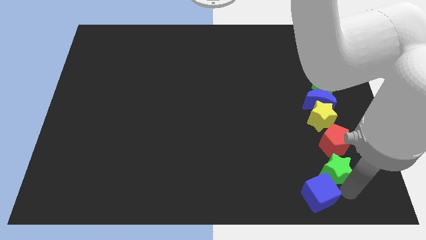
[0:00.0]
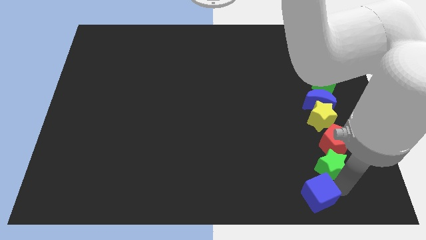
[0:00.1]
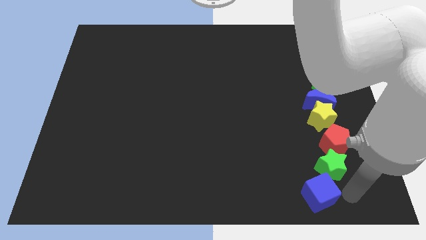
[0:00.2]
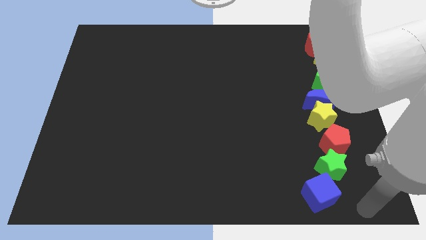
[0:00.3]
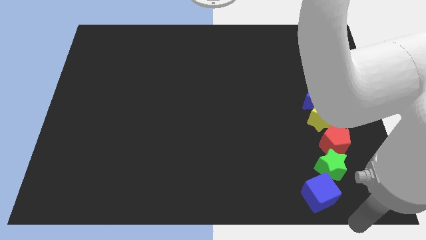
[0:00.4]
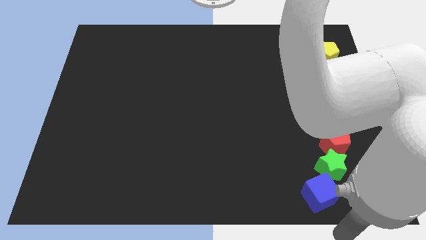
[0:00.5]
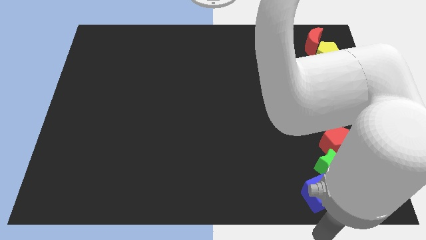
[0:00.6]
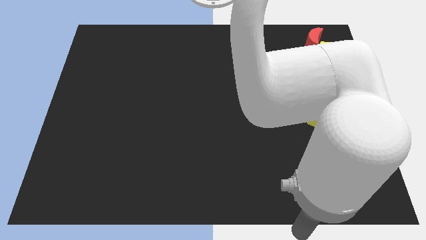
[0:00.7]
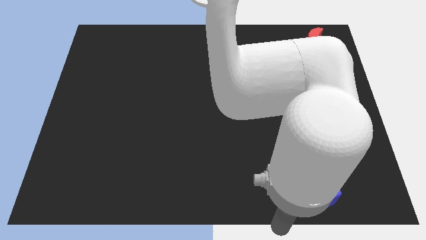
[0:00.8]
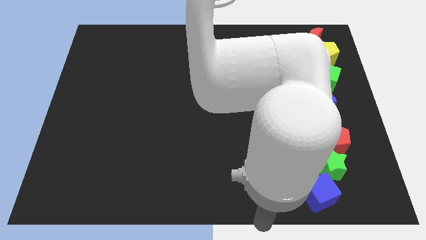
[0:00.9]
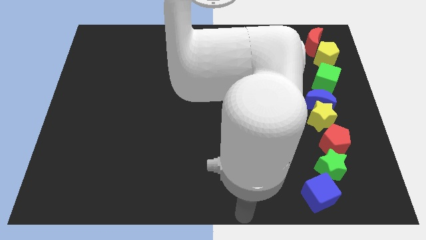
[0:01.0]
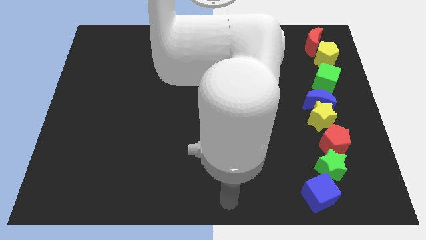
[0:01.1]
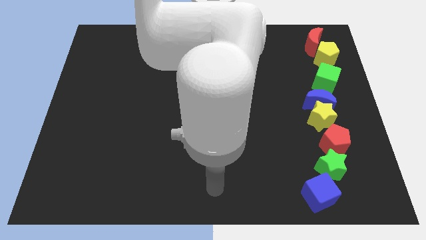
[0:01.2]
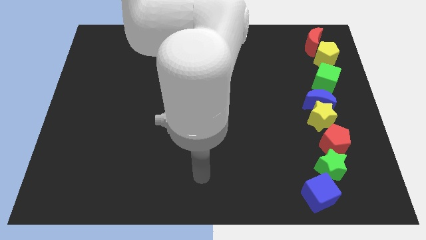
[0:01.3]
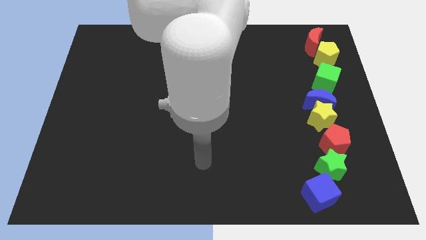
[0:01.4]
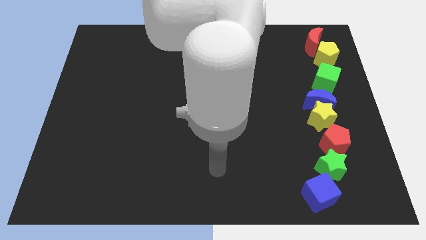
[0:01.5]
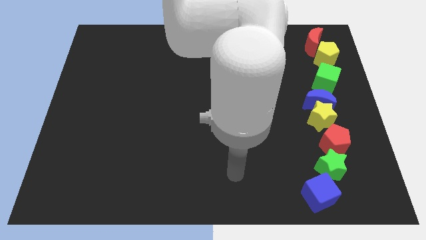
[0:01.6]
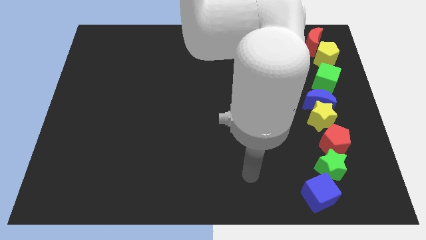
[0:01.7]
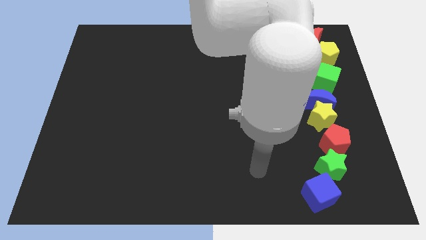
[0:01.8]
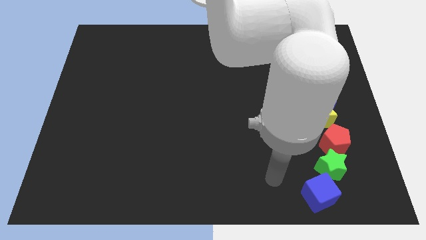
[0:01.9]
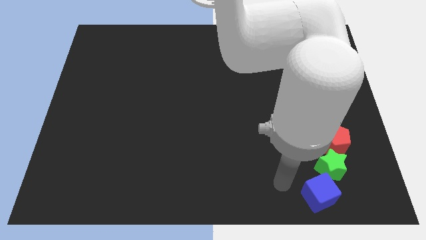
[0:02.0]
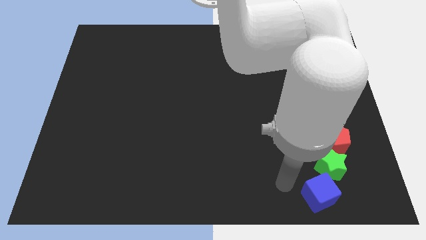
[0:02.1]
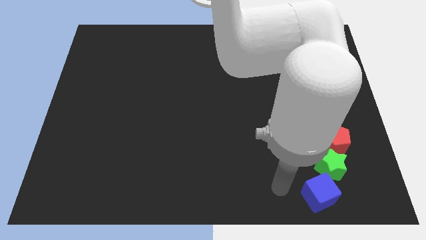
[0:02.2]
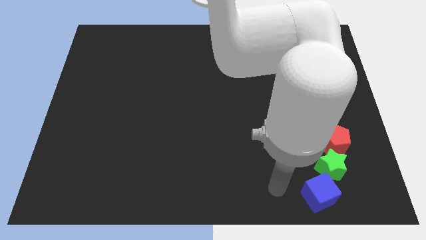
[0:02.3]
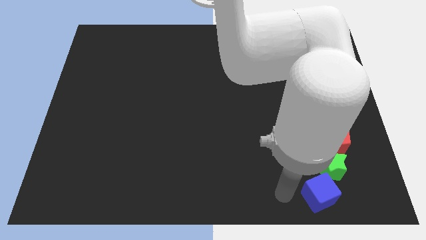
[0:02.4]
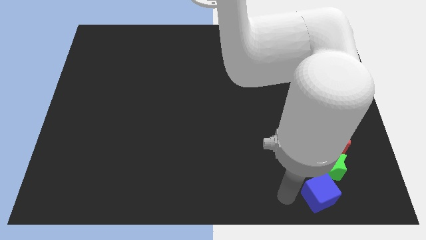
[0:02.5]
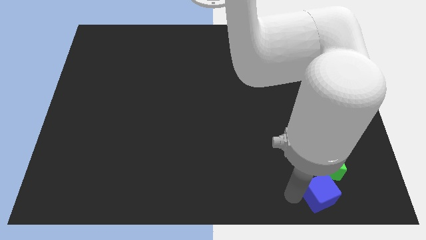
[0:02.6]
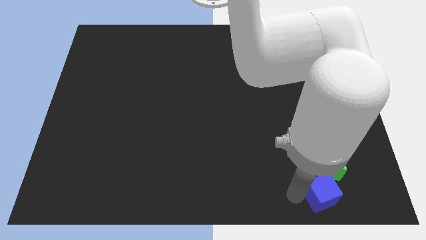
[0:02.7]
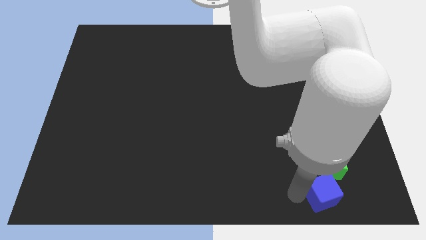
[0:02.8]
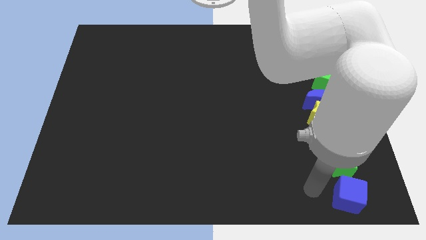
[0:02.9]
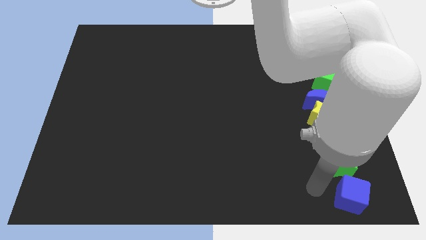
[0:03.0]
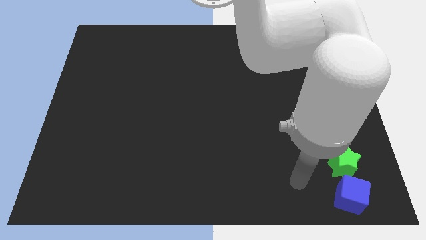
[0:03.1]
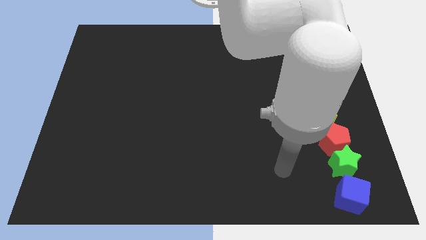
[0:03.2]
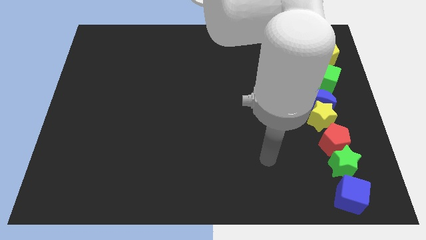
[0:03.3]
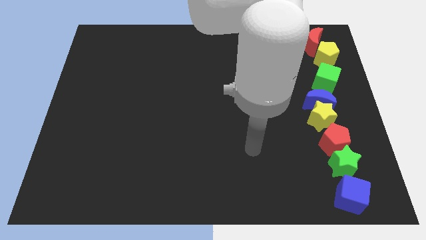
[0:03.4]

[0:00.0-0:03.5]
line the blocks up vertically

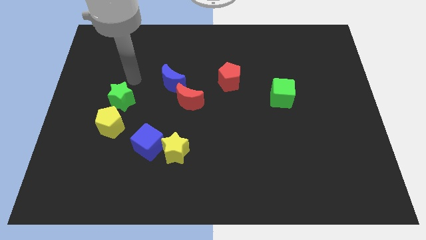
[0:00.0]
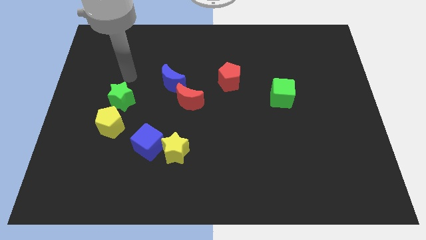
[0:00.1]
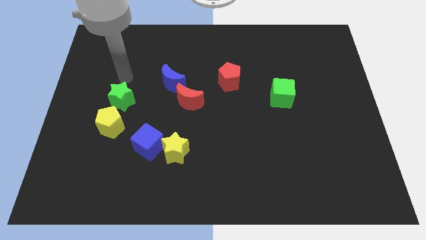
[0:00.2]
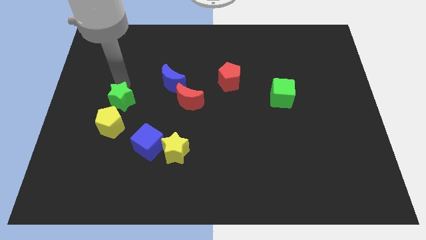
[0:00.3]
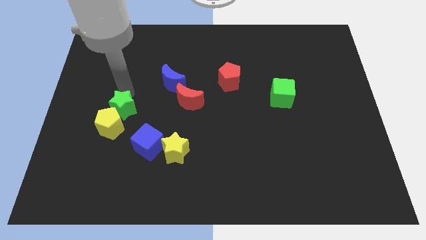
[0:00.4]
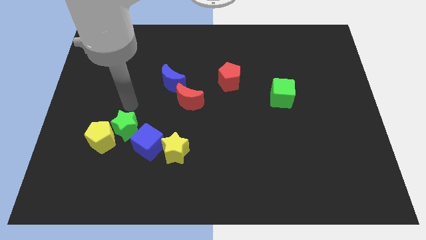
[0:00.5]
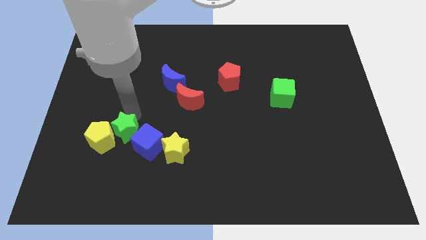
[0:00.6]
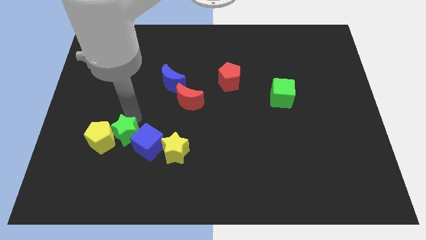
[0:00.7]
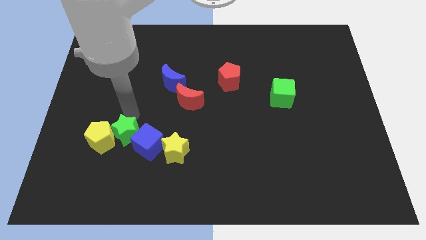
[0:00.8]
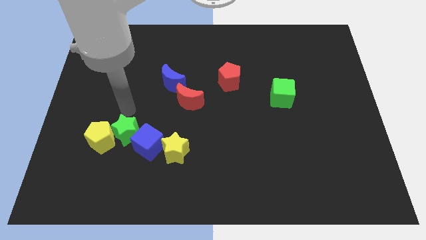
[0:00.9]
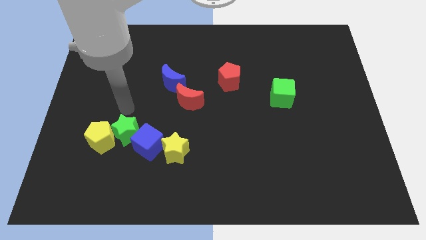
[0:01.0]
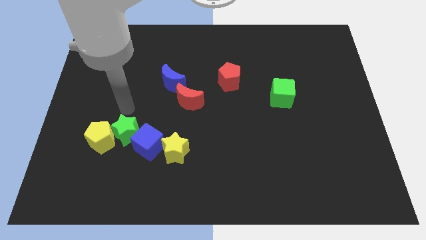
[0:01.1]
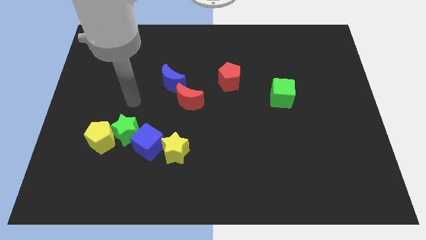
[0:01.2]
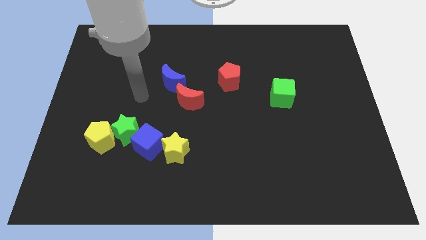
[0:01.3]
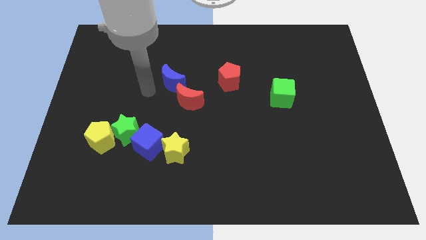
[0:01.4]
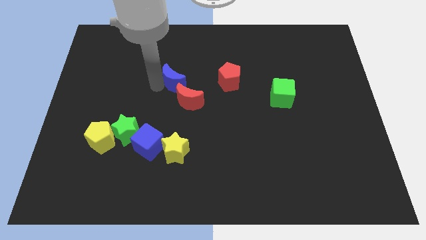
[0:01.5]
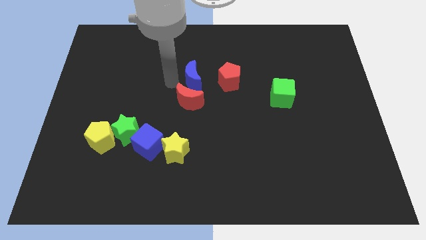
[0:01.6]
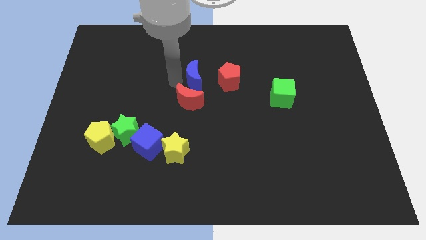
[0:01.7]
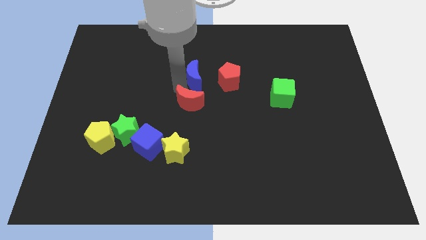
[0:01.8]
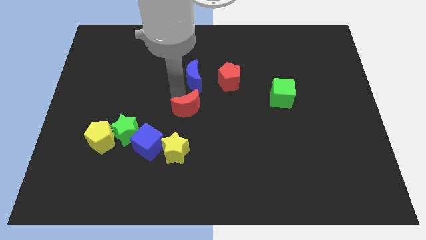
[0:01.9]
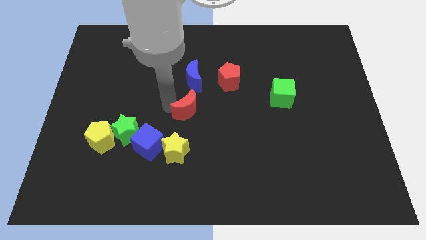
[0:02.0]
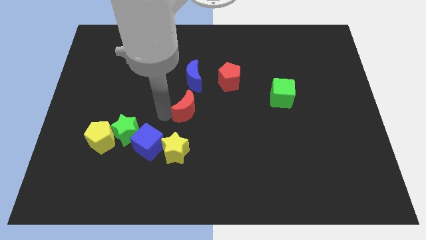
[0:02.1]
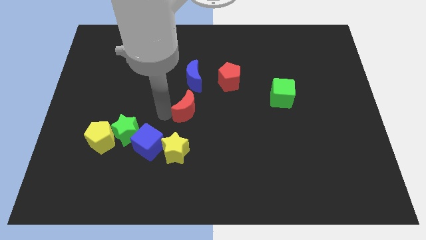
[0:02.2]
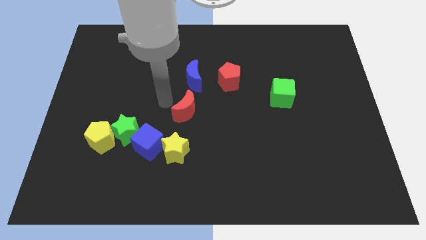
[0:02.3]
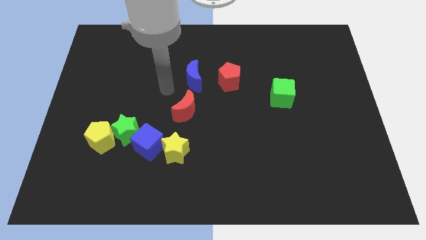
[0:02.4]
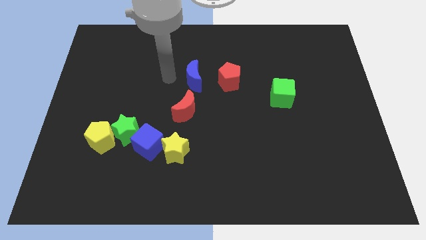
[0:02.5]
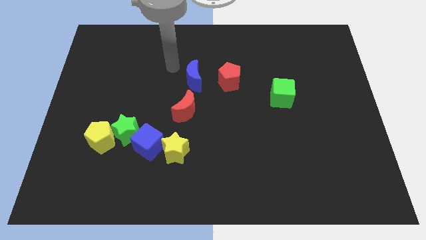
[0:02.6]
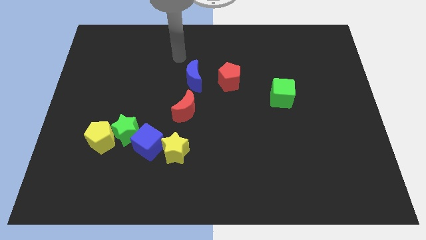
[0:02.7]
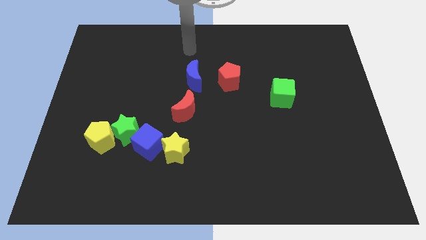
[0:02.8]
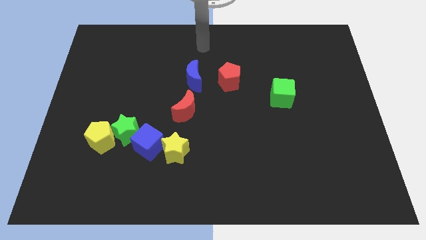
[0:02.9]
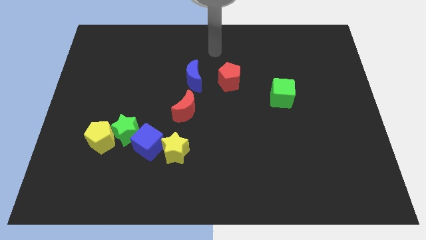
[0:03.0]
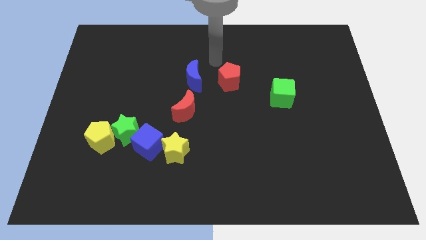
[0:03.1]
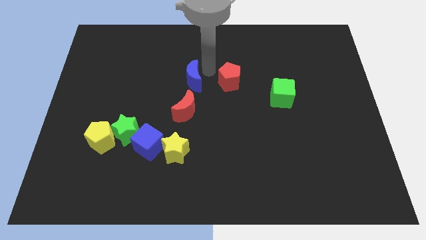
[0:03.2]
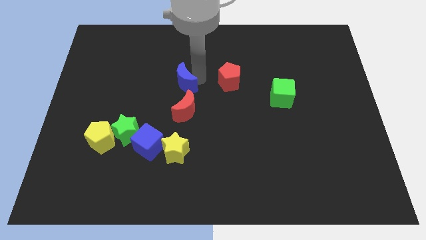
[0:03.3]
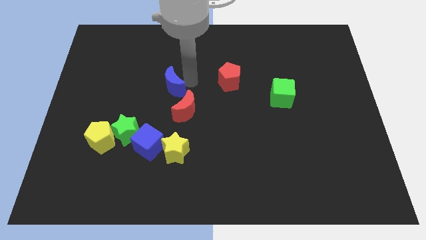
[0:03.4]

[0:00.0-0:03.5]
place the yellow star at the top right side of the yellow pentagon

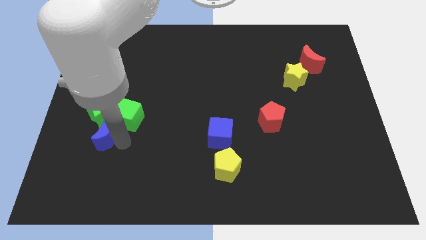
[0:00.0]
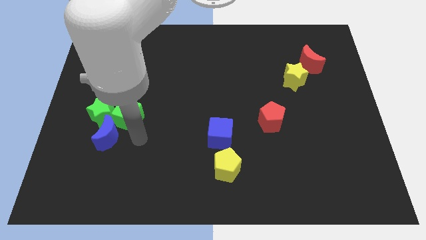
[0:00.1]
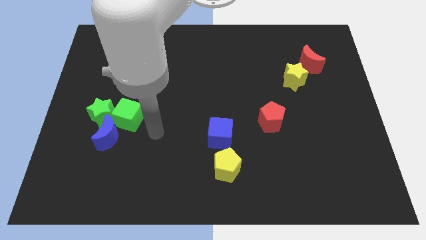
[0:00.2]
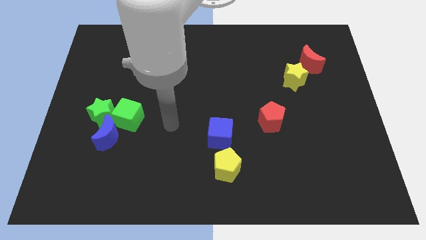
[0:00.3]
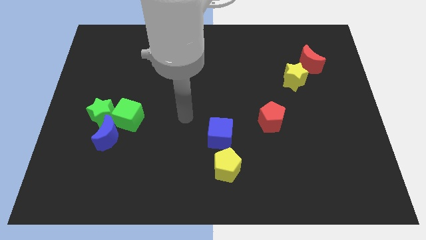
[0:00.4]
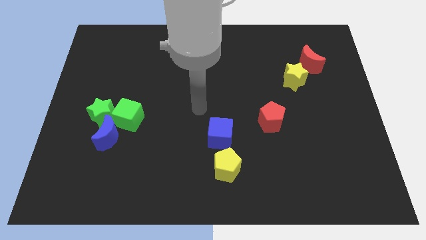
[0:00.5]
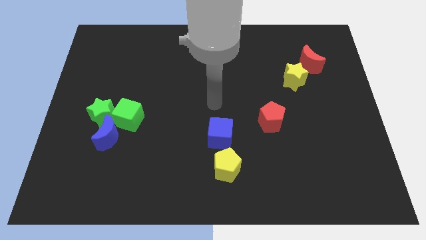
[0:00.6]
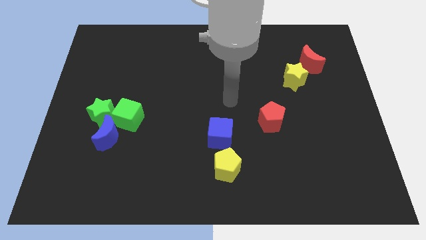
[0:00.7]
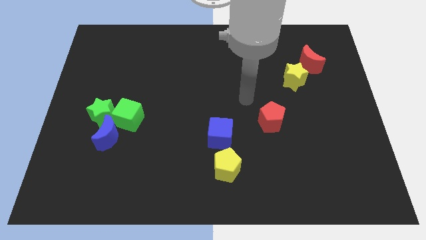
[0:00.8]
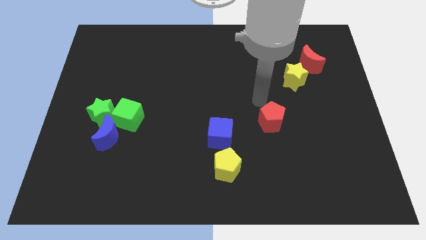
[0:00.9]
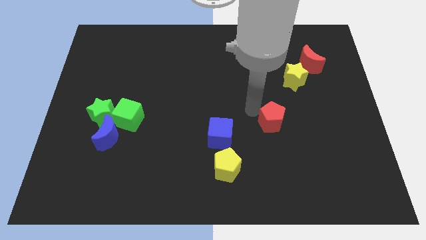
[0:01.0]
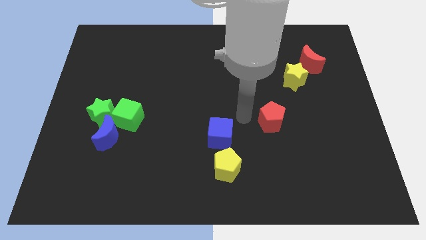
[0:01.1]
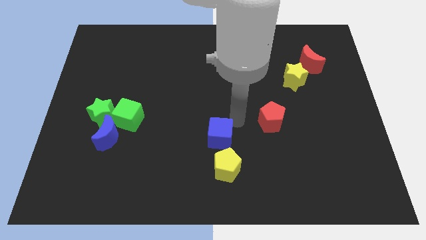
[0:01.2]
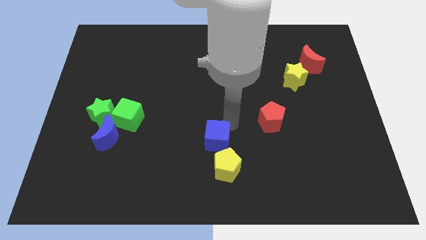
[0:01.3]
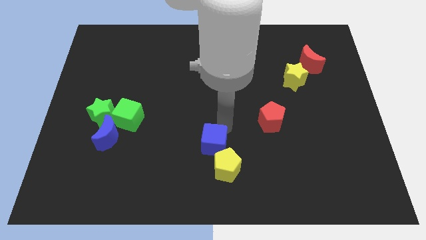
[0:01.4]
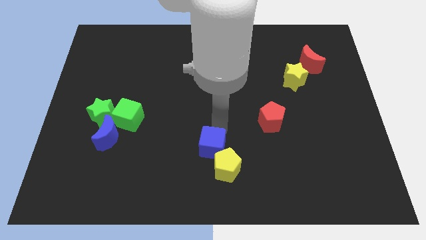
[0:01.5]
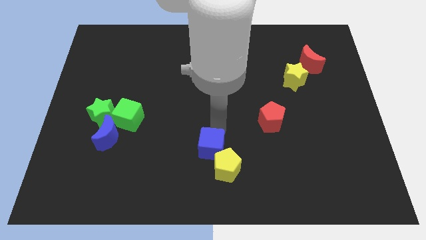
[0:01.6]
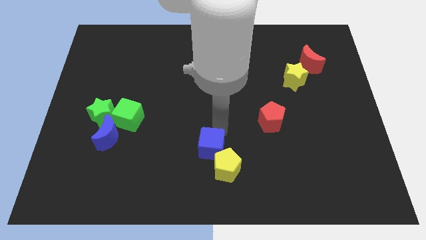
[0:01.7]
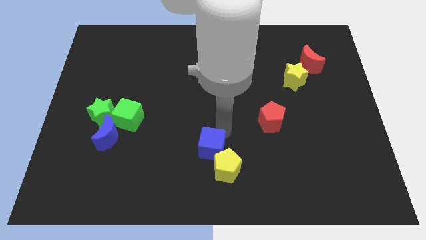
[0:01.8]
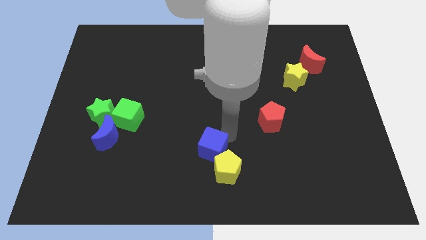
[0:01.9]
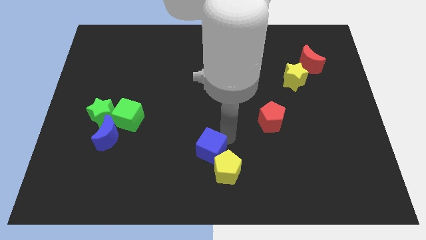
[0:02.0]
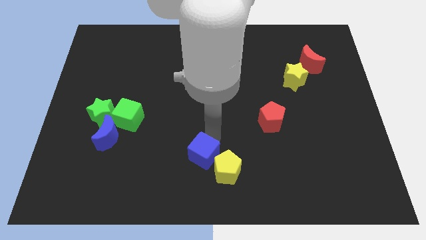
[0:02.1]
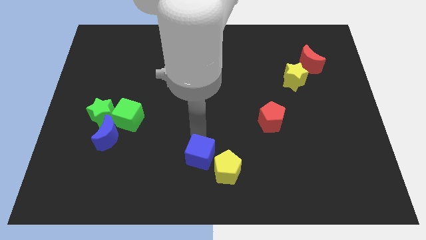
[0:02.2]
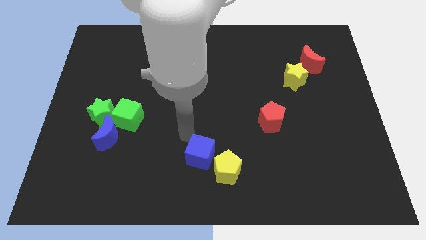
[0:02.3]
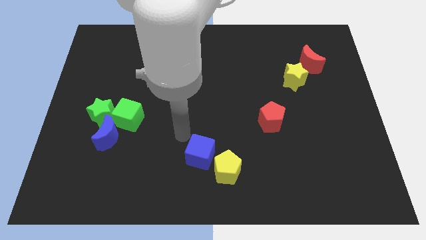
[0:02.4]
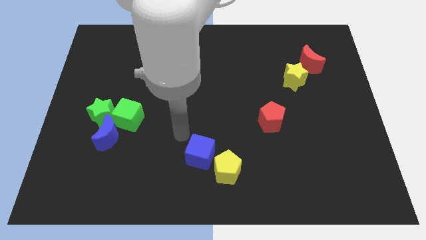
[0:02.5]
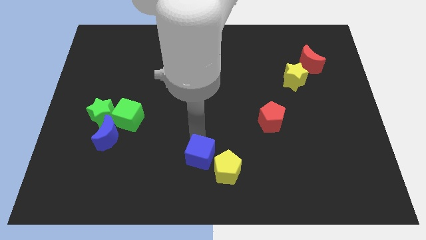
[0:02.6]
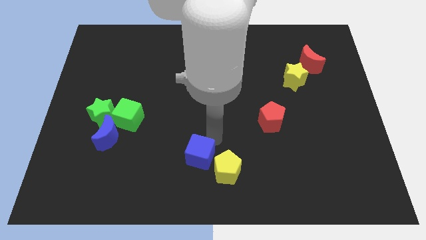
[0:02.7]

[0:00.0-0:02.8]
move the blue cube to the top left of the yellow pentagon
